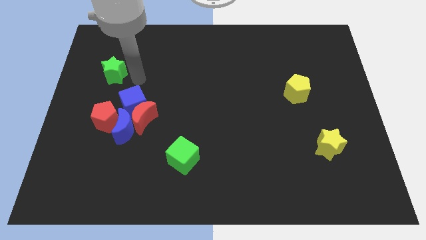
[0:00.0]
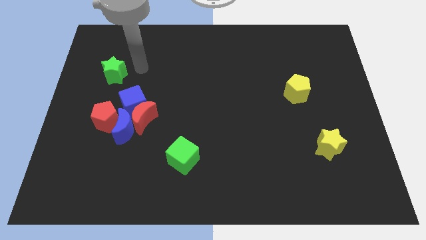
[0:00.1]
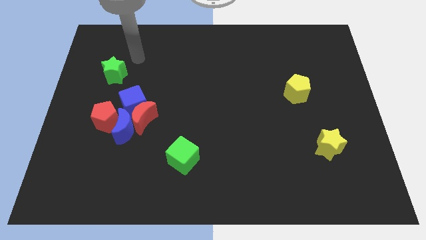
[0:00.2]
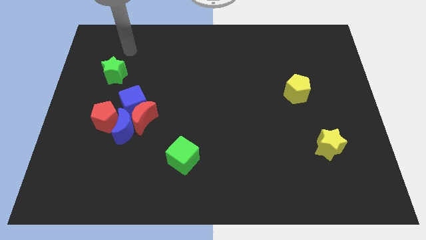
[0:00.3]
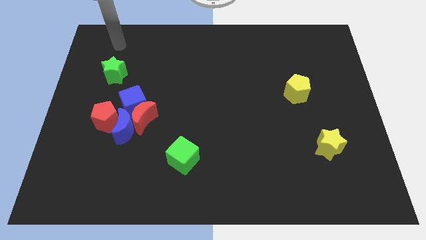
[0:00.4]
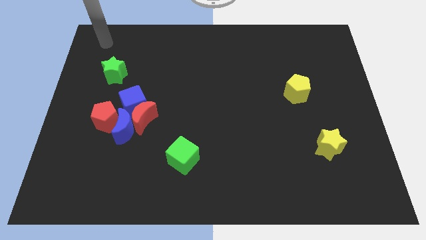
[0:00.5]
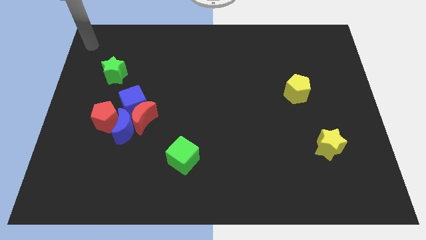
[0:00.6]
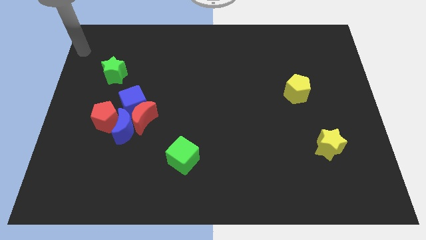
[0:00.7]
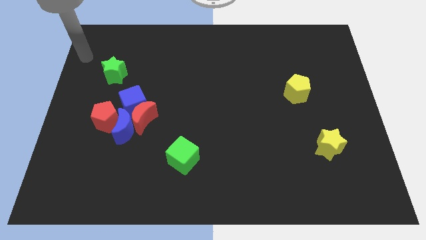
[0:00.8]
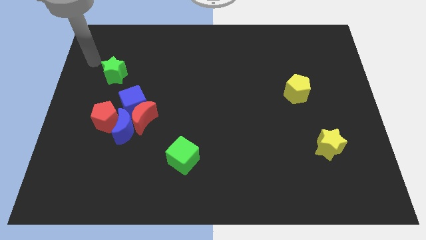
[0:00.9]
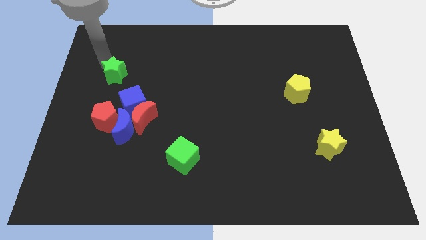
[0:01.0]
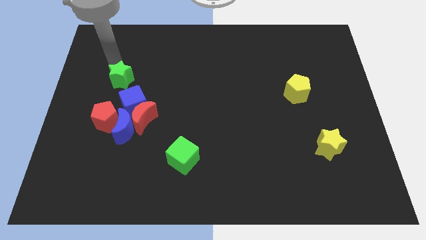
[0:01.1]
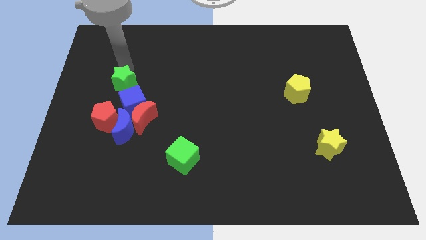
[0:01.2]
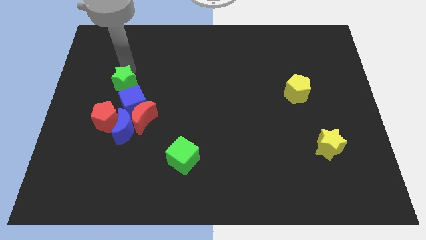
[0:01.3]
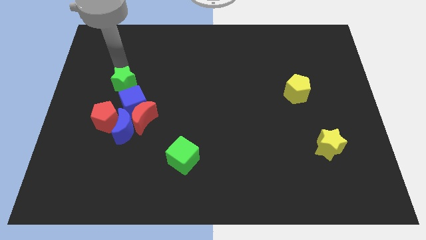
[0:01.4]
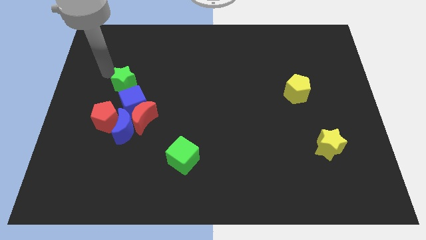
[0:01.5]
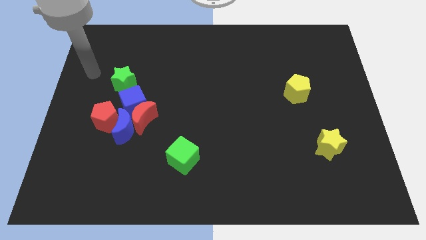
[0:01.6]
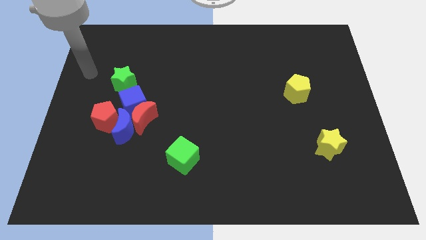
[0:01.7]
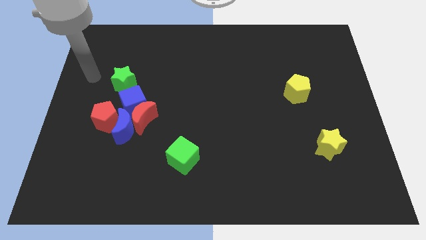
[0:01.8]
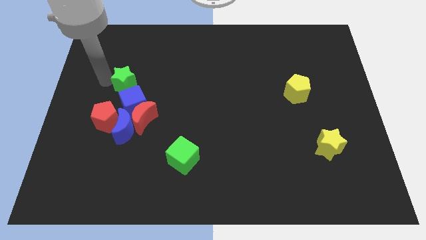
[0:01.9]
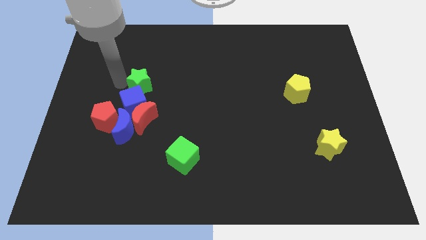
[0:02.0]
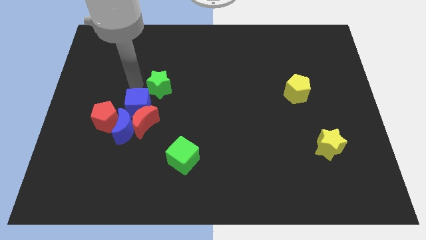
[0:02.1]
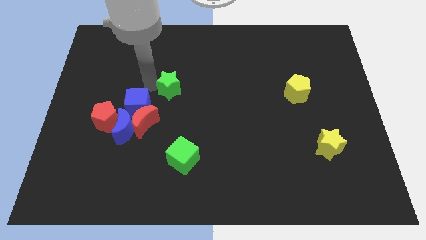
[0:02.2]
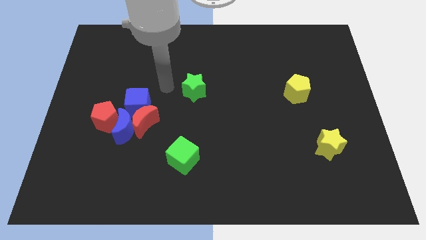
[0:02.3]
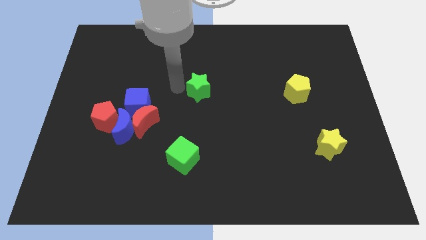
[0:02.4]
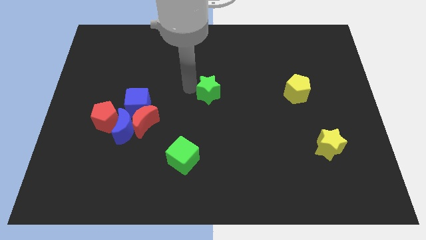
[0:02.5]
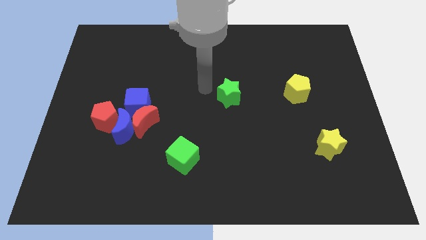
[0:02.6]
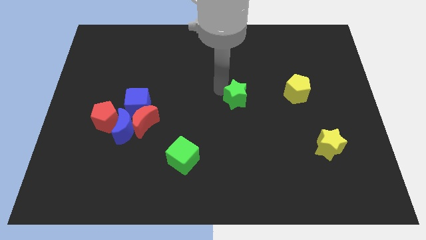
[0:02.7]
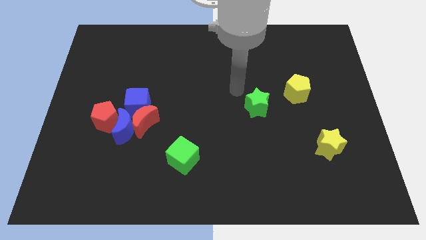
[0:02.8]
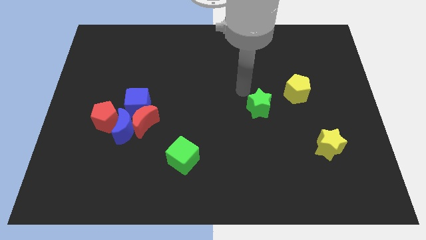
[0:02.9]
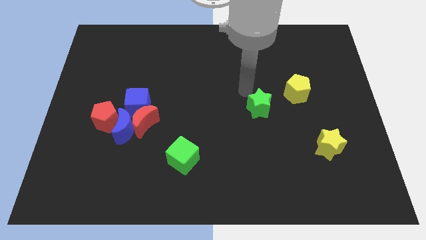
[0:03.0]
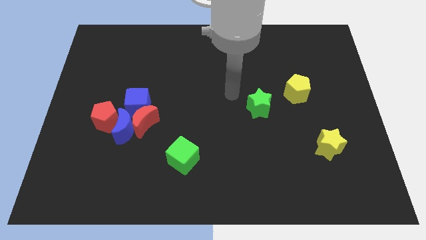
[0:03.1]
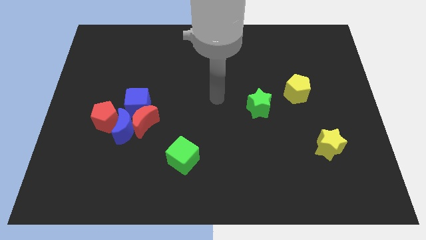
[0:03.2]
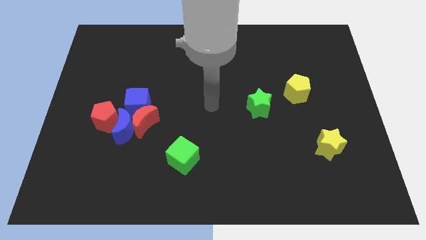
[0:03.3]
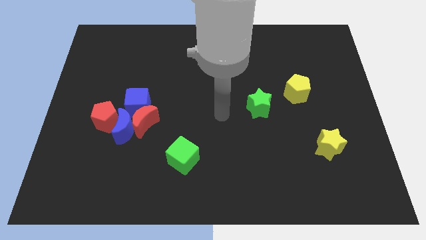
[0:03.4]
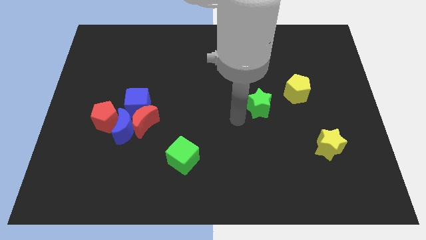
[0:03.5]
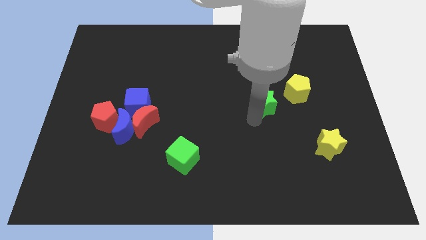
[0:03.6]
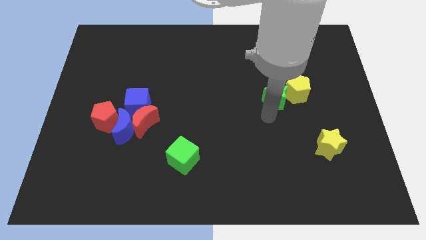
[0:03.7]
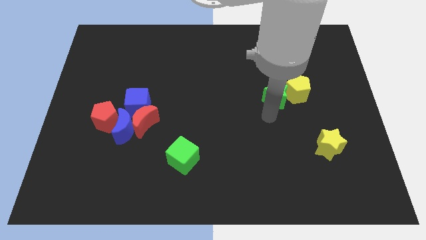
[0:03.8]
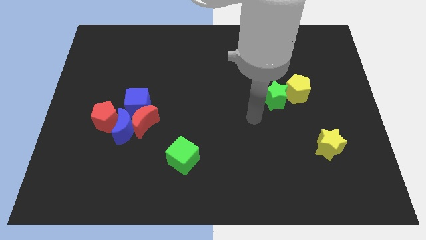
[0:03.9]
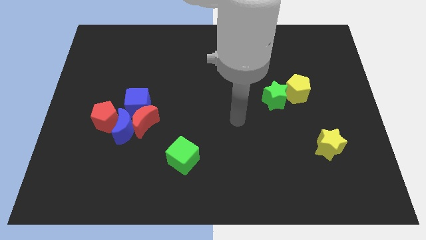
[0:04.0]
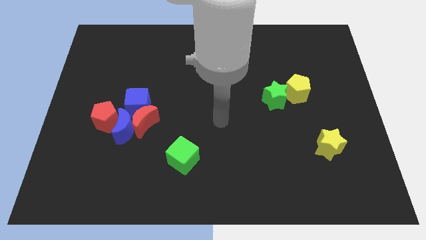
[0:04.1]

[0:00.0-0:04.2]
place the green star beside the yellow pentagon

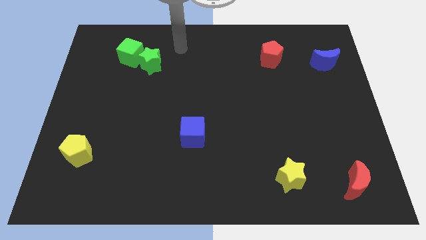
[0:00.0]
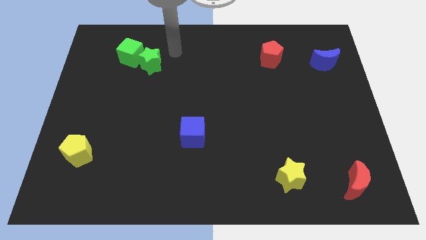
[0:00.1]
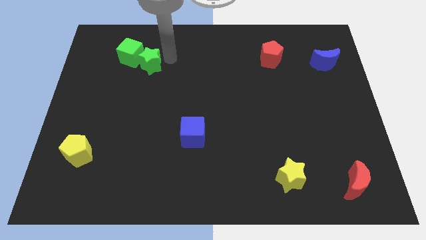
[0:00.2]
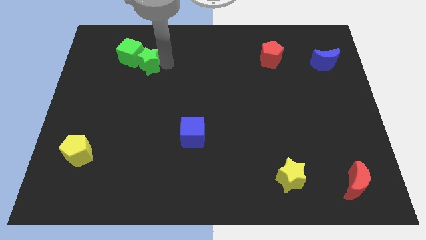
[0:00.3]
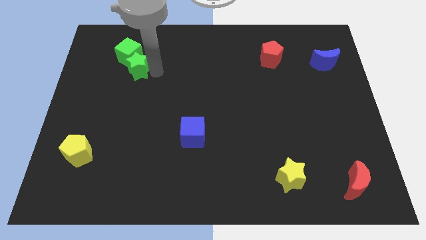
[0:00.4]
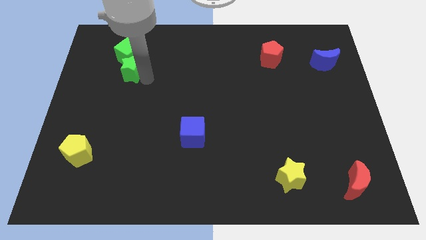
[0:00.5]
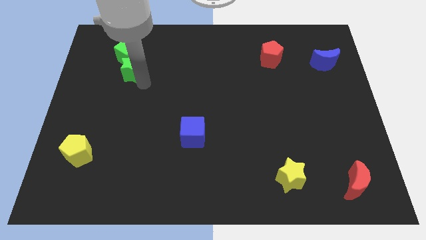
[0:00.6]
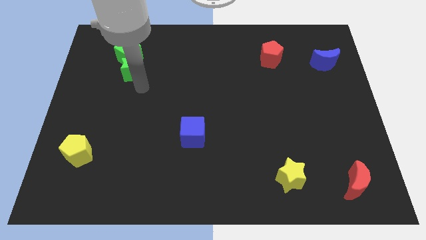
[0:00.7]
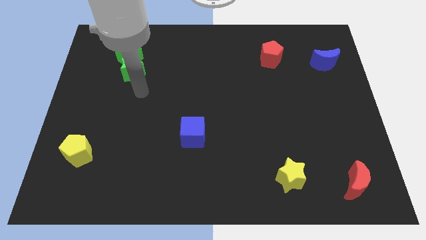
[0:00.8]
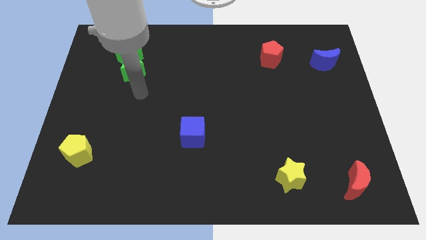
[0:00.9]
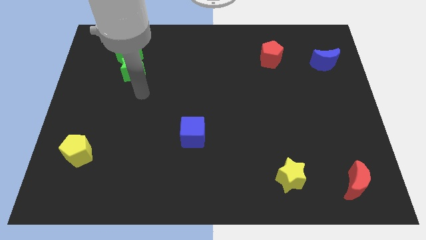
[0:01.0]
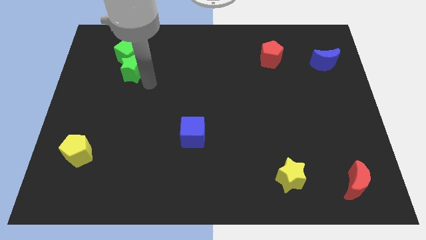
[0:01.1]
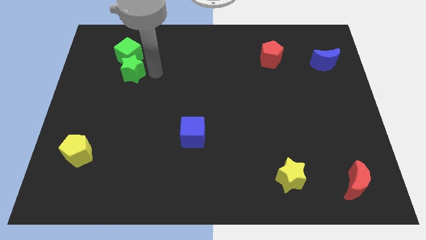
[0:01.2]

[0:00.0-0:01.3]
move the green star downwards slightly

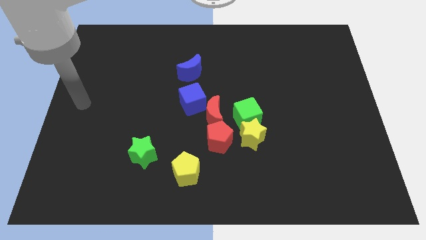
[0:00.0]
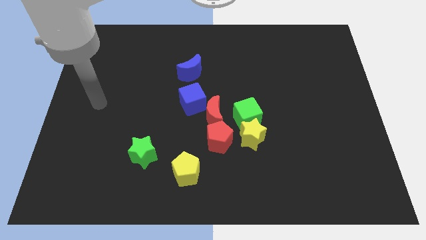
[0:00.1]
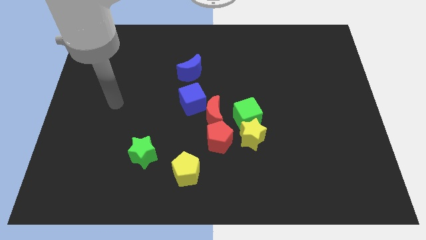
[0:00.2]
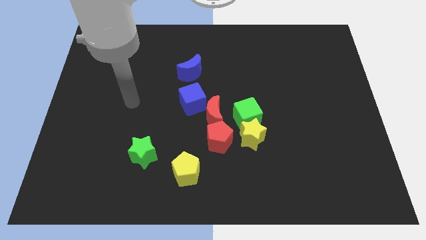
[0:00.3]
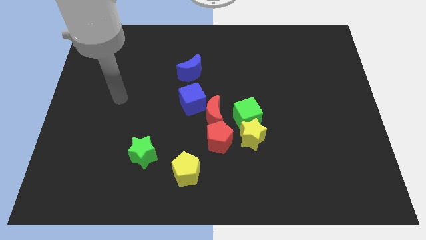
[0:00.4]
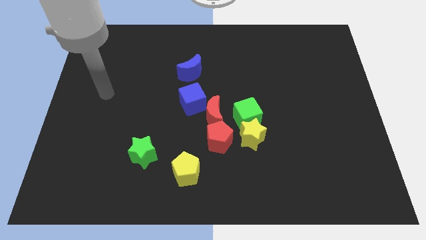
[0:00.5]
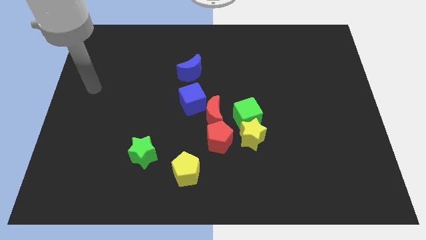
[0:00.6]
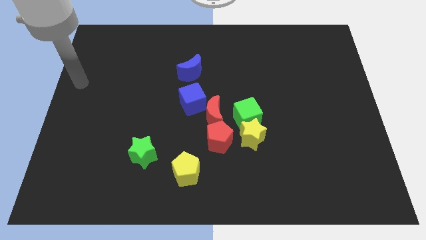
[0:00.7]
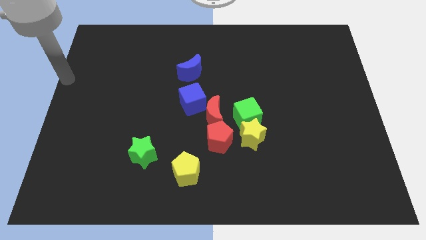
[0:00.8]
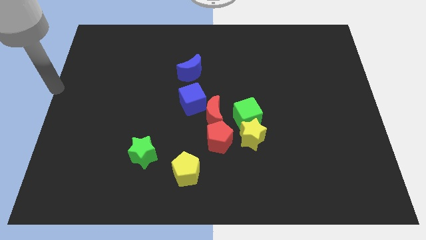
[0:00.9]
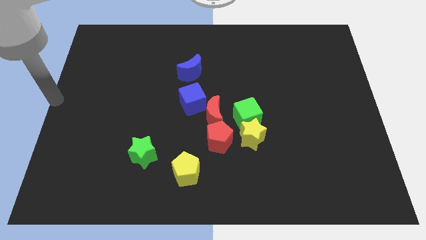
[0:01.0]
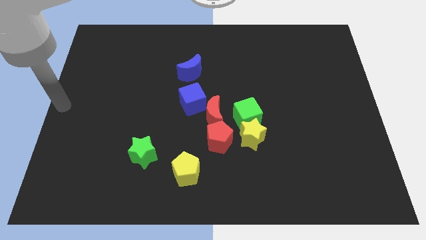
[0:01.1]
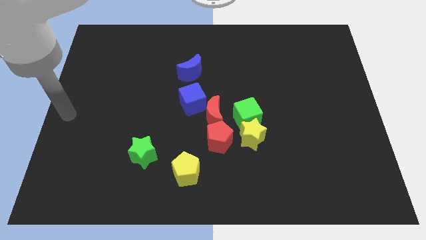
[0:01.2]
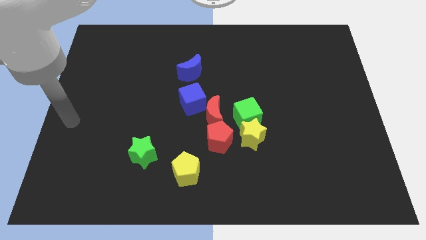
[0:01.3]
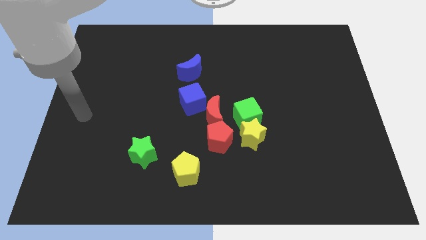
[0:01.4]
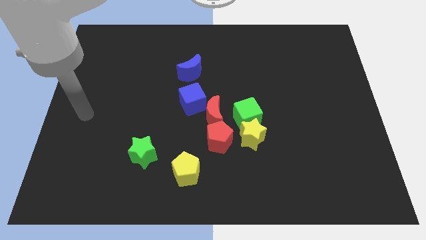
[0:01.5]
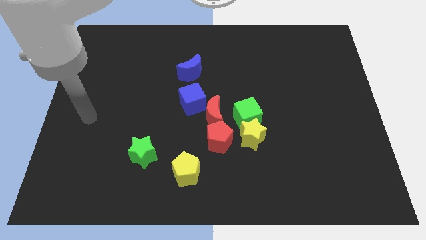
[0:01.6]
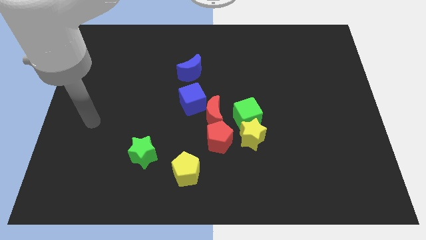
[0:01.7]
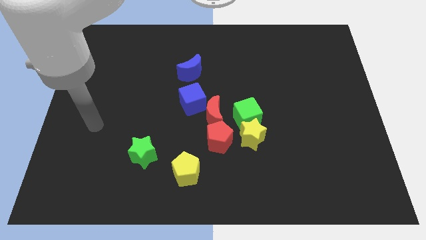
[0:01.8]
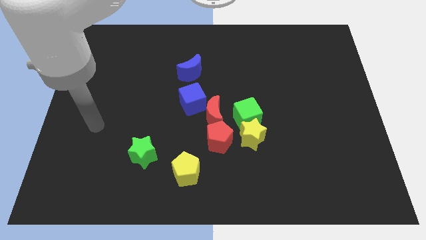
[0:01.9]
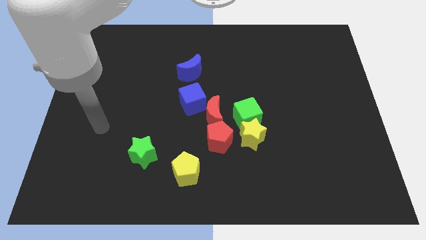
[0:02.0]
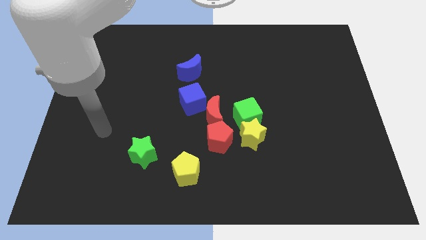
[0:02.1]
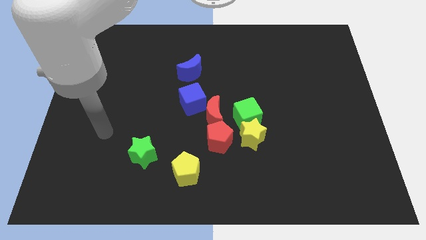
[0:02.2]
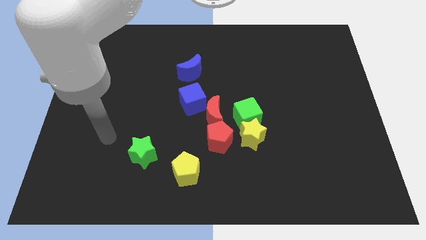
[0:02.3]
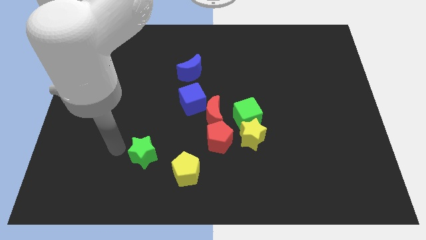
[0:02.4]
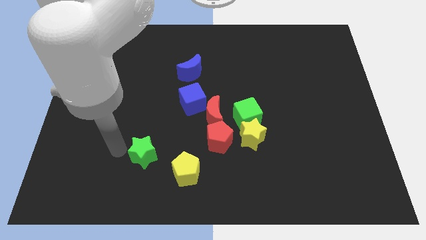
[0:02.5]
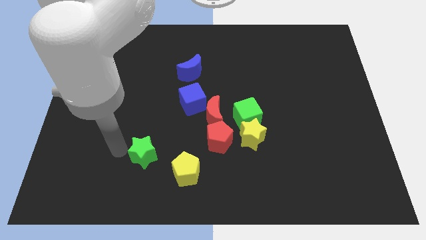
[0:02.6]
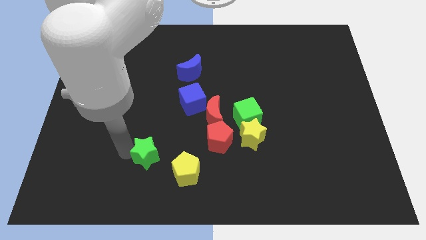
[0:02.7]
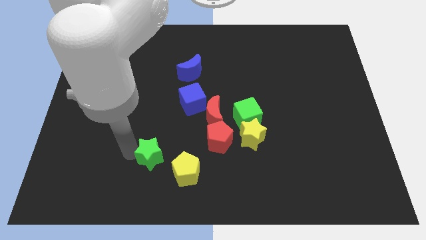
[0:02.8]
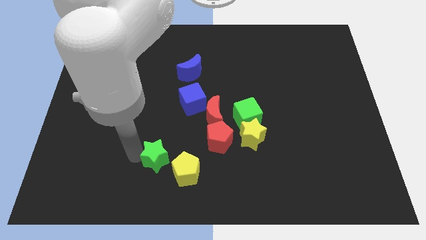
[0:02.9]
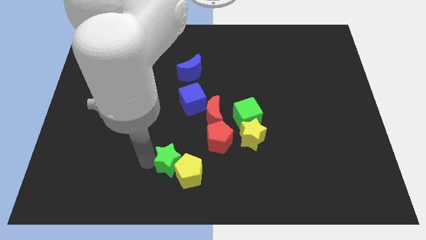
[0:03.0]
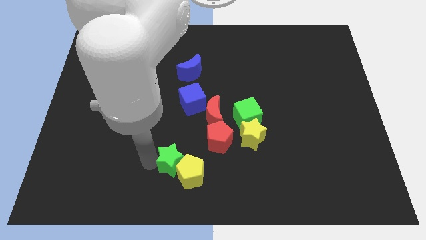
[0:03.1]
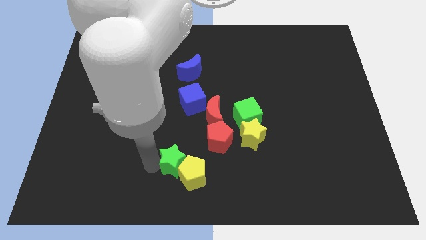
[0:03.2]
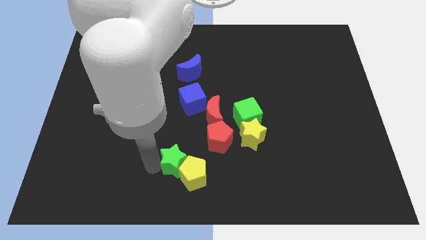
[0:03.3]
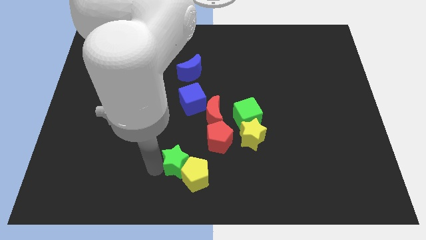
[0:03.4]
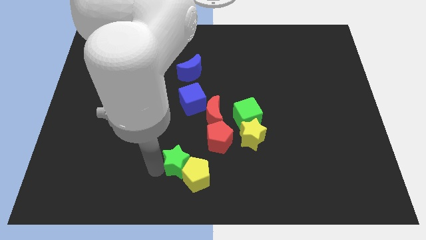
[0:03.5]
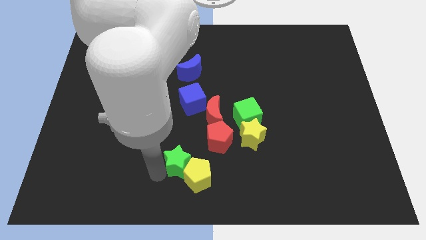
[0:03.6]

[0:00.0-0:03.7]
push green star towards yellow pentagon

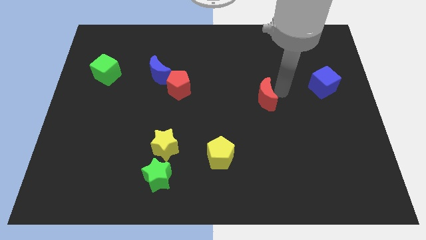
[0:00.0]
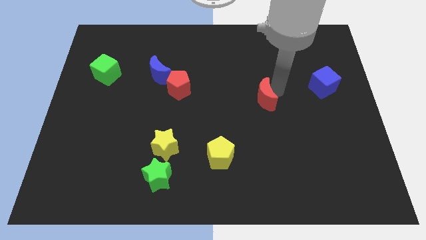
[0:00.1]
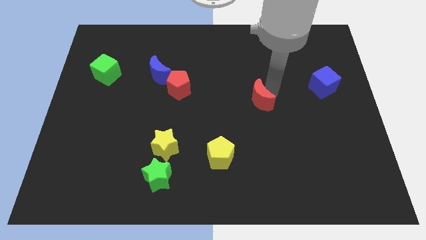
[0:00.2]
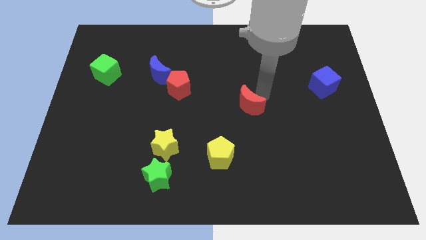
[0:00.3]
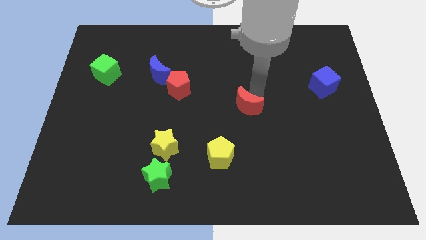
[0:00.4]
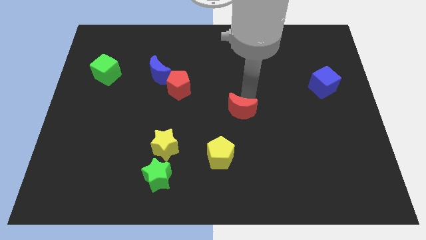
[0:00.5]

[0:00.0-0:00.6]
move the red crescent towards the yellow pentagon
